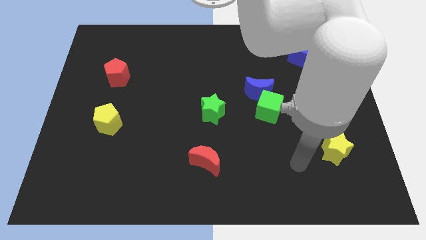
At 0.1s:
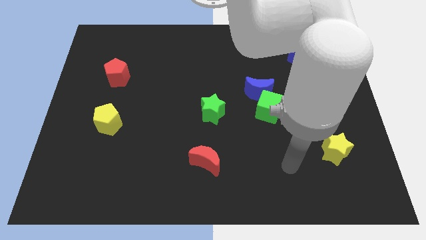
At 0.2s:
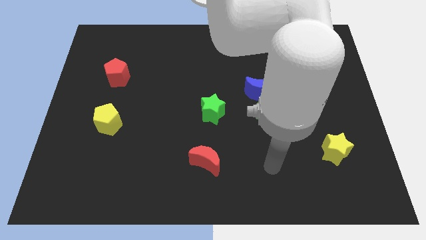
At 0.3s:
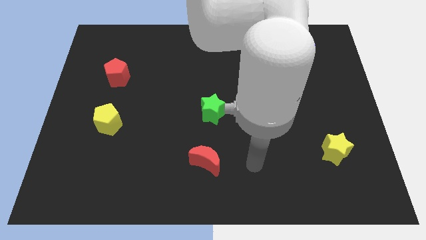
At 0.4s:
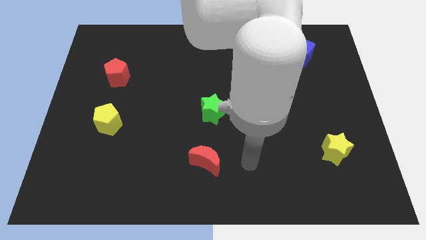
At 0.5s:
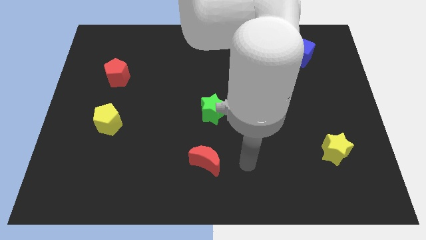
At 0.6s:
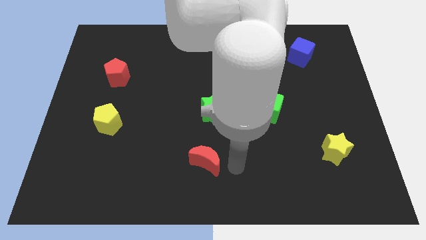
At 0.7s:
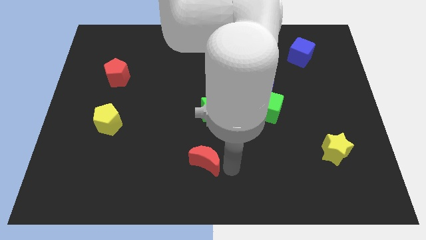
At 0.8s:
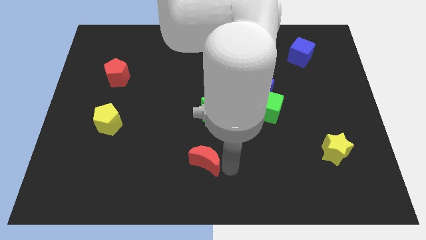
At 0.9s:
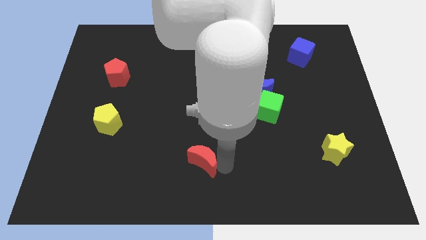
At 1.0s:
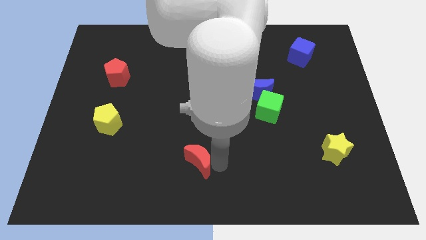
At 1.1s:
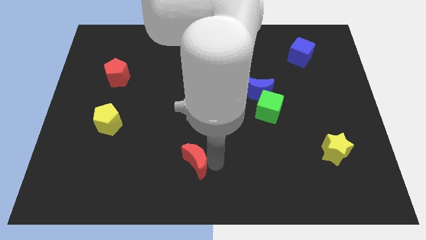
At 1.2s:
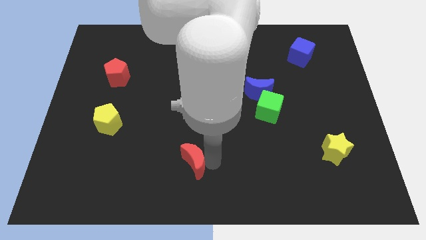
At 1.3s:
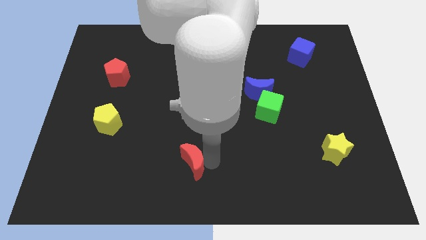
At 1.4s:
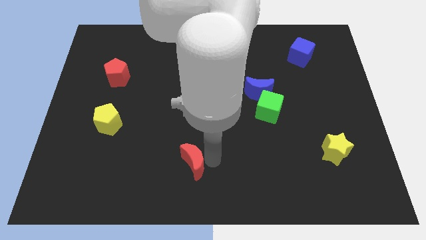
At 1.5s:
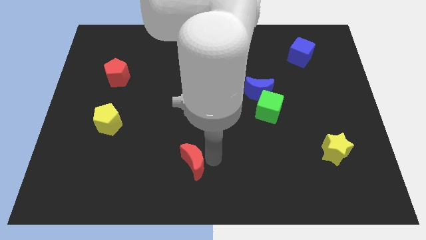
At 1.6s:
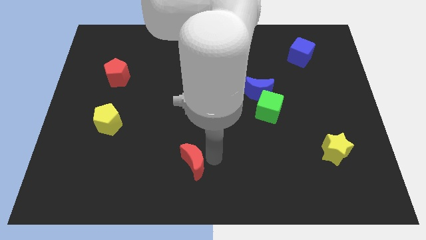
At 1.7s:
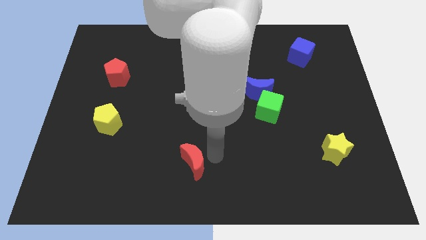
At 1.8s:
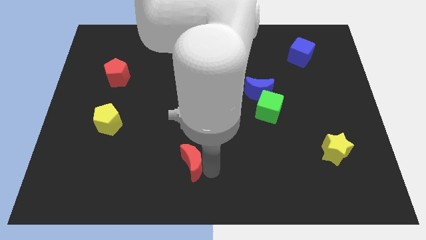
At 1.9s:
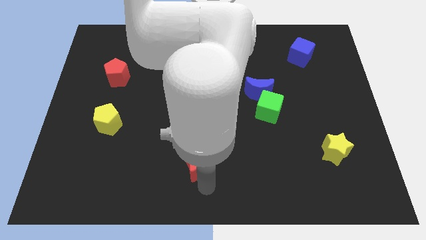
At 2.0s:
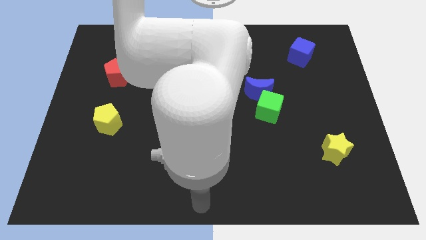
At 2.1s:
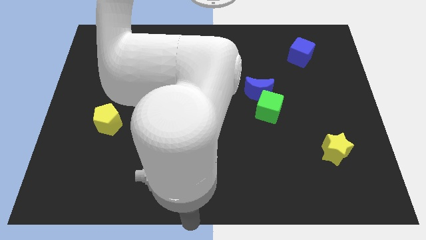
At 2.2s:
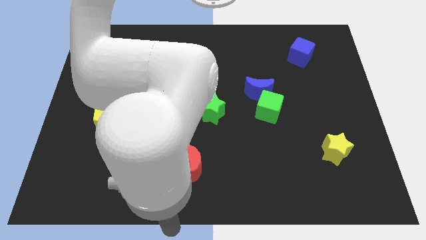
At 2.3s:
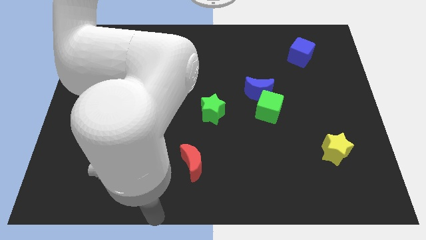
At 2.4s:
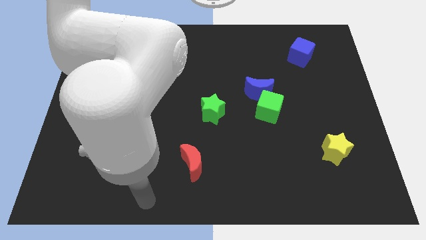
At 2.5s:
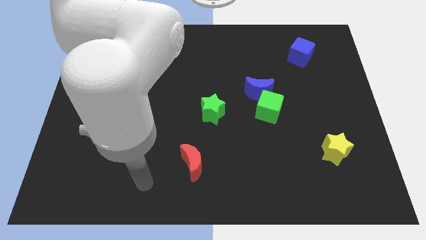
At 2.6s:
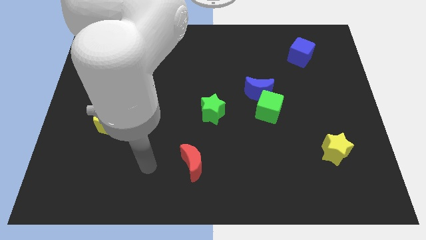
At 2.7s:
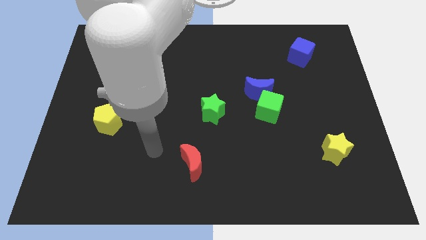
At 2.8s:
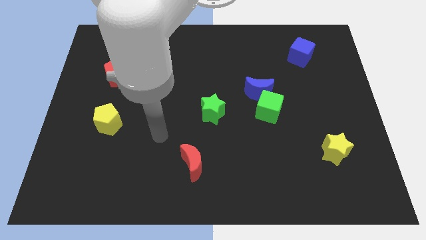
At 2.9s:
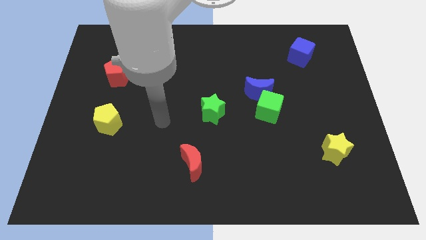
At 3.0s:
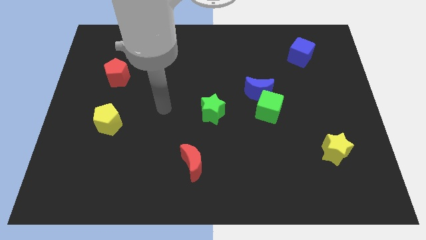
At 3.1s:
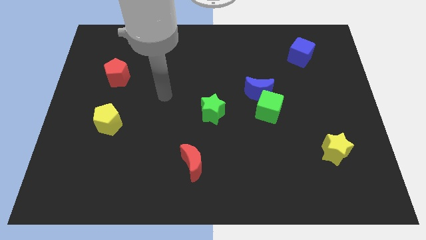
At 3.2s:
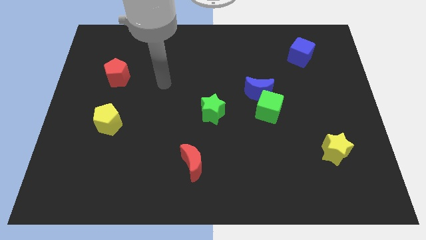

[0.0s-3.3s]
push the red crescent slightly to the left

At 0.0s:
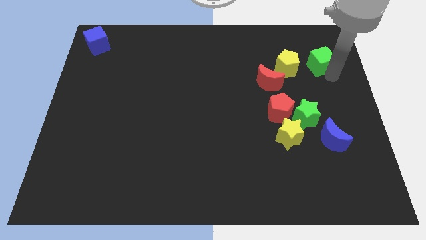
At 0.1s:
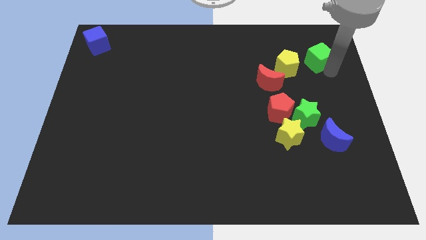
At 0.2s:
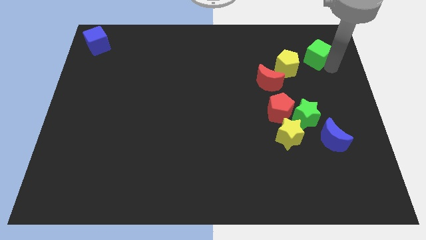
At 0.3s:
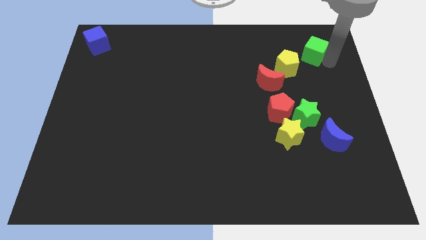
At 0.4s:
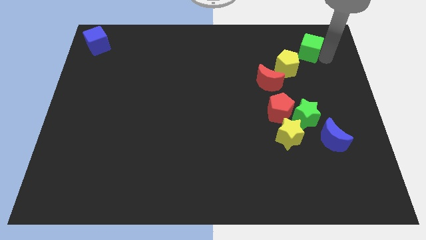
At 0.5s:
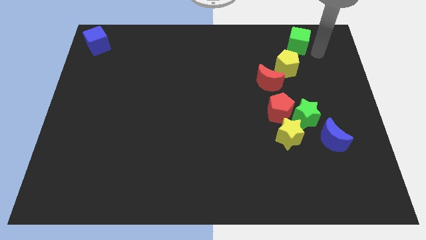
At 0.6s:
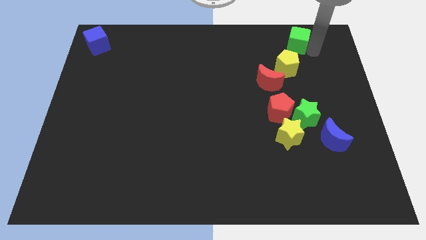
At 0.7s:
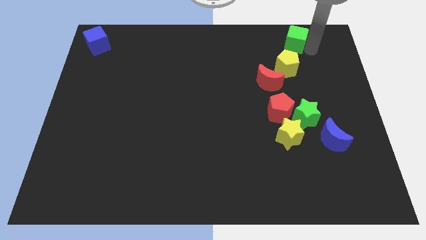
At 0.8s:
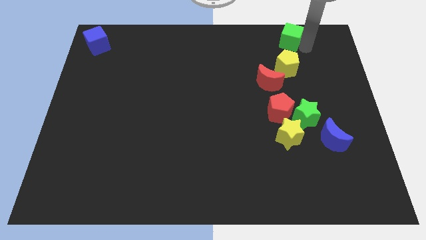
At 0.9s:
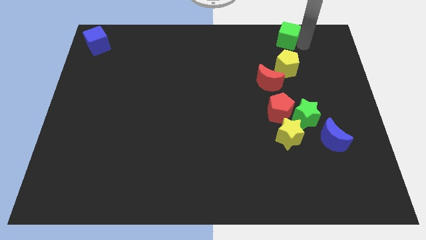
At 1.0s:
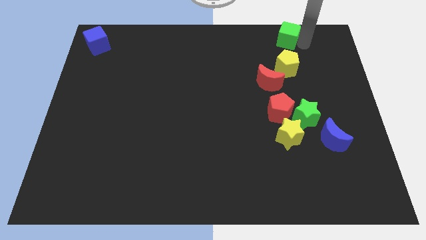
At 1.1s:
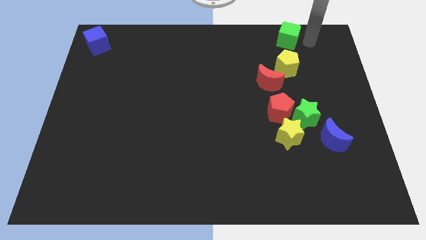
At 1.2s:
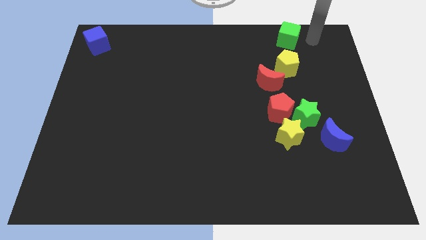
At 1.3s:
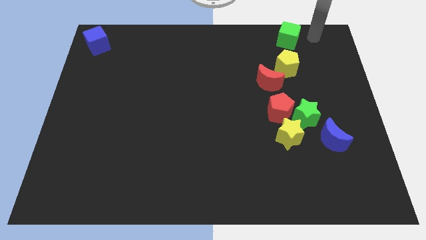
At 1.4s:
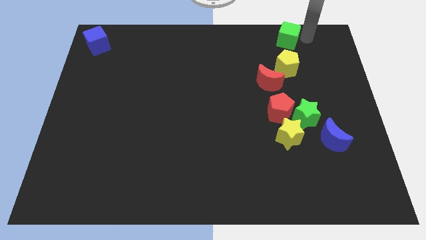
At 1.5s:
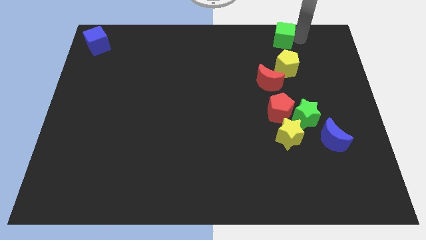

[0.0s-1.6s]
place the green cube above the yellow pentagon

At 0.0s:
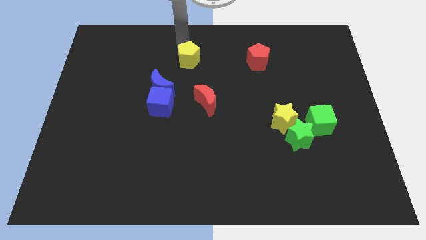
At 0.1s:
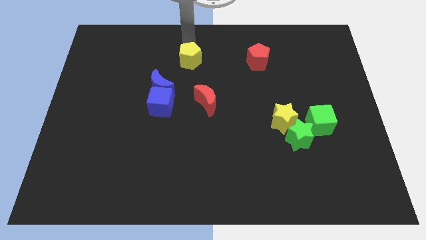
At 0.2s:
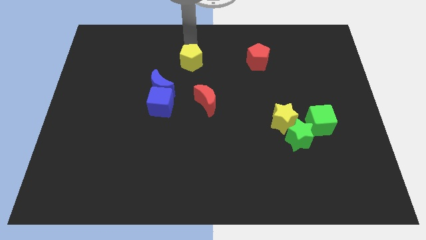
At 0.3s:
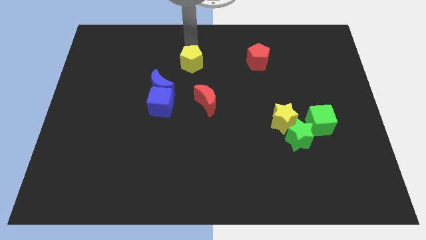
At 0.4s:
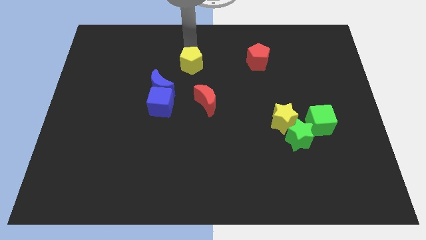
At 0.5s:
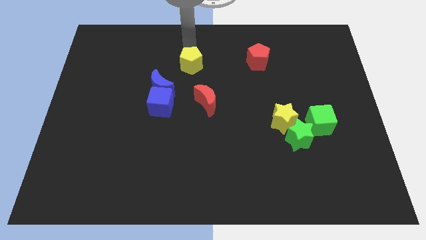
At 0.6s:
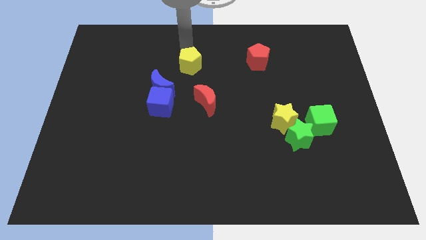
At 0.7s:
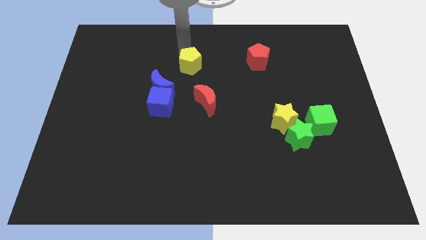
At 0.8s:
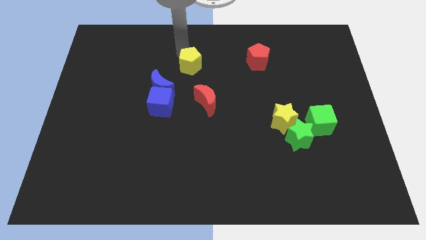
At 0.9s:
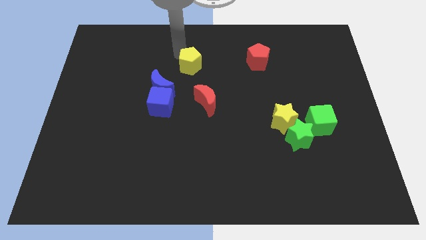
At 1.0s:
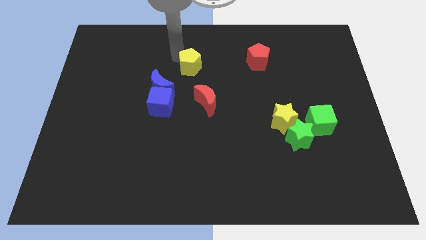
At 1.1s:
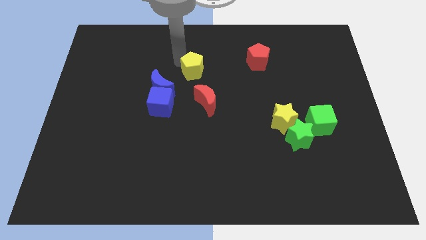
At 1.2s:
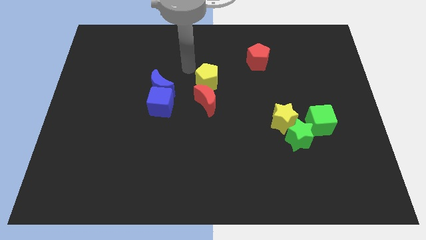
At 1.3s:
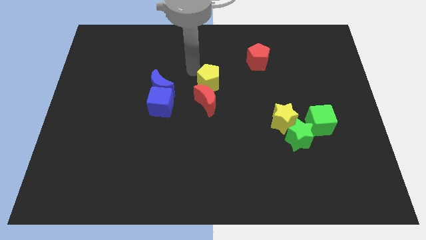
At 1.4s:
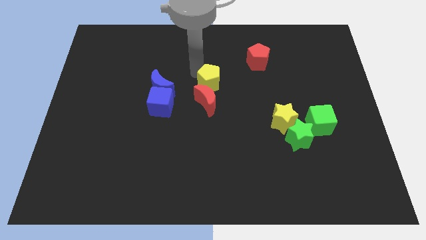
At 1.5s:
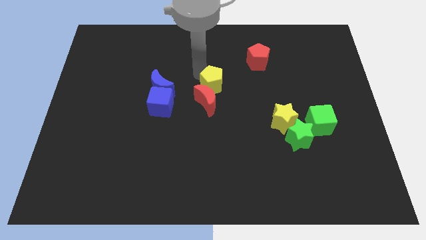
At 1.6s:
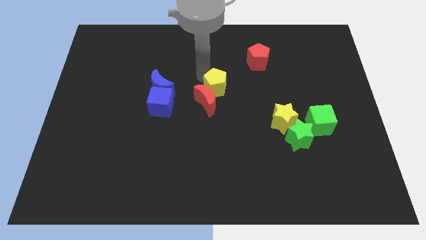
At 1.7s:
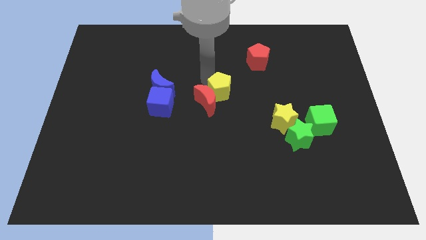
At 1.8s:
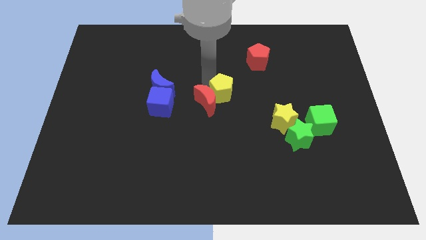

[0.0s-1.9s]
push the yellow pentagon to the right of the red crescent

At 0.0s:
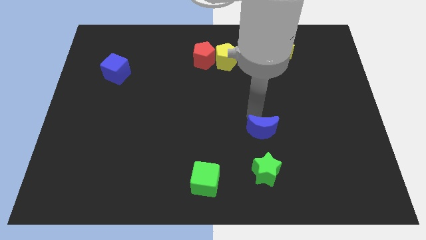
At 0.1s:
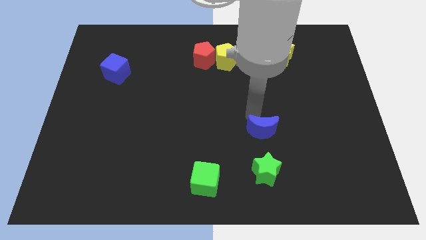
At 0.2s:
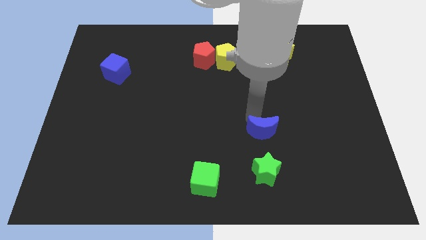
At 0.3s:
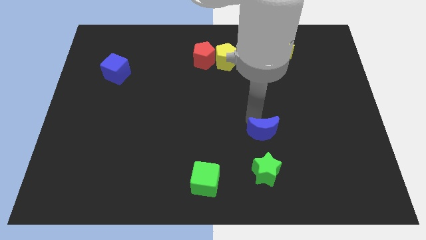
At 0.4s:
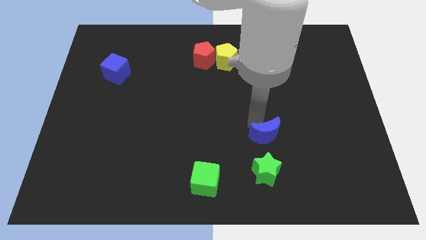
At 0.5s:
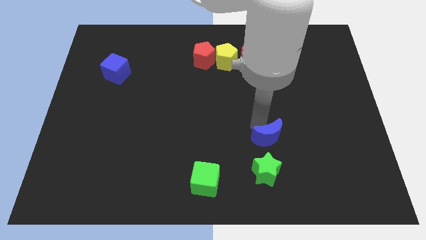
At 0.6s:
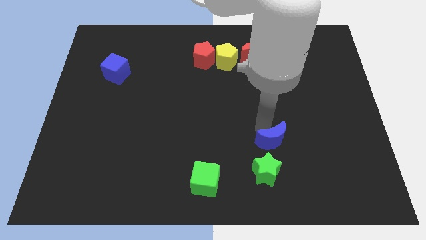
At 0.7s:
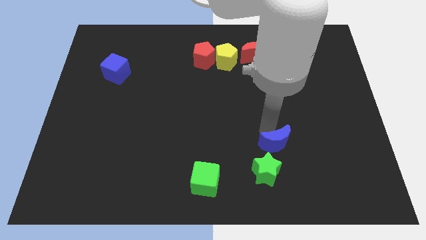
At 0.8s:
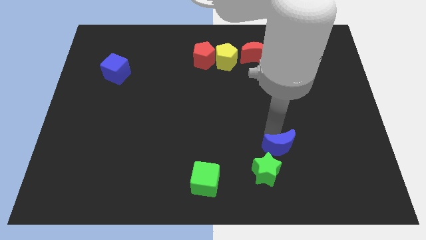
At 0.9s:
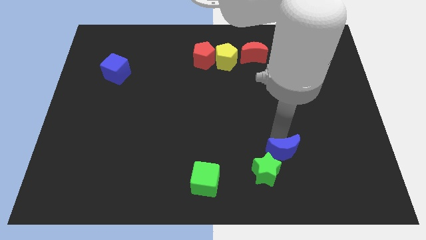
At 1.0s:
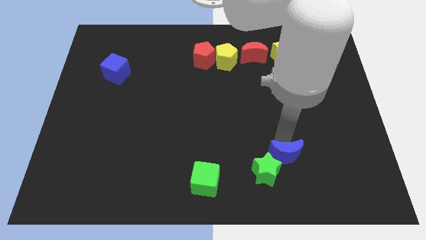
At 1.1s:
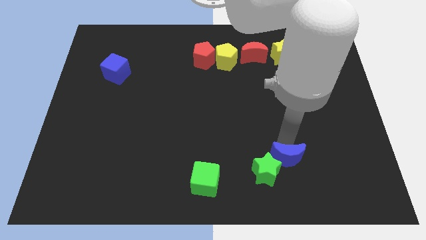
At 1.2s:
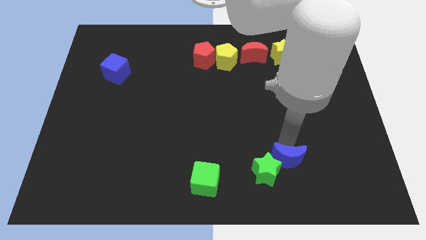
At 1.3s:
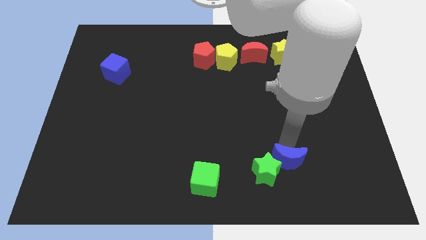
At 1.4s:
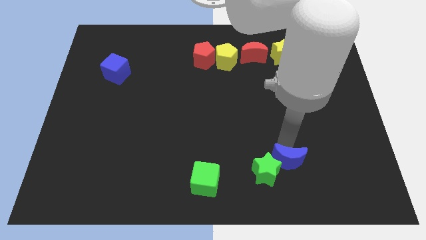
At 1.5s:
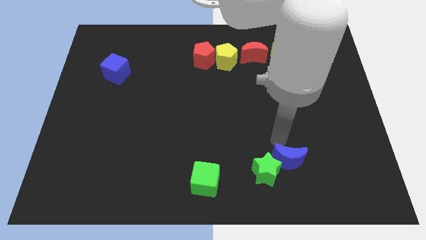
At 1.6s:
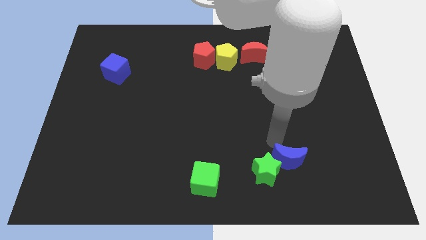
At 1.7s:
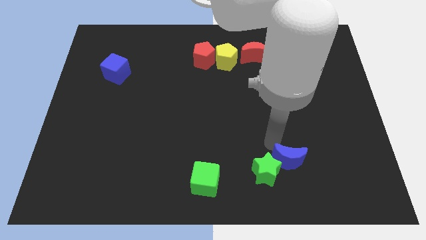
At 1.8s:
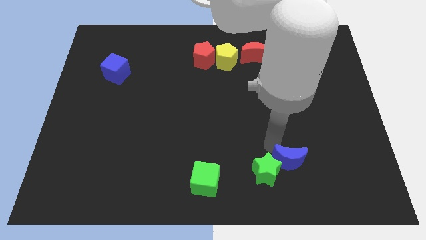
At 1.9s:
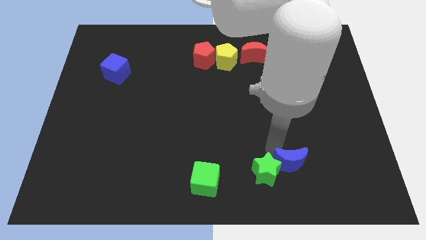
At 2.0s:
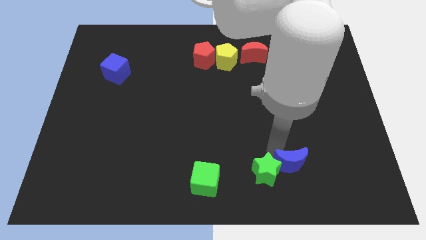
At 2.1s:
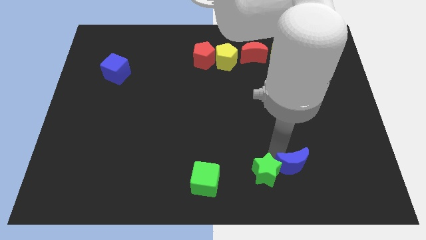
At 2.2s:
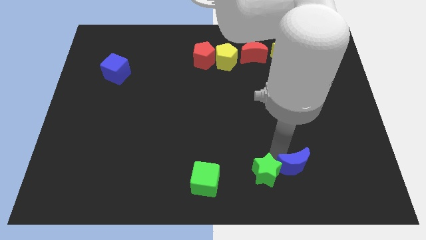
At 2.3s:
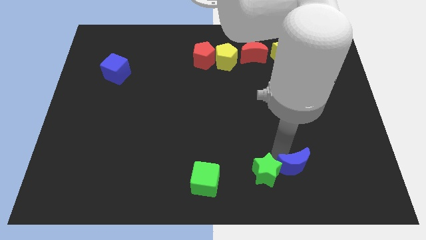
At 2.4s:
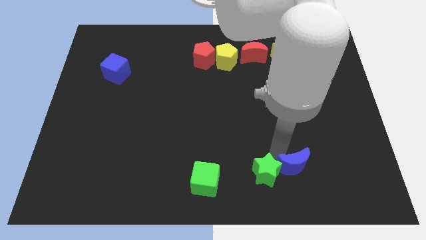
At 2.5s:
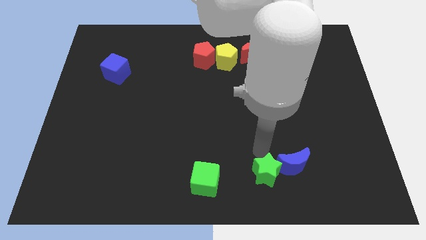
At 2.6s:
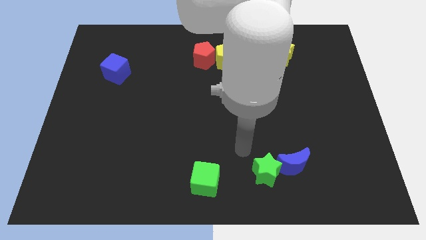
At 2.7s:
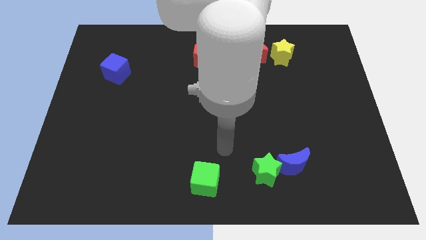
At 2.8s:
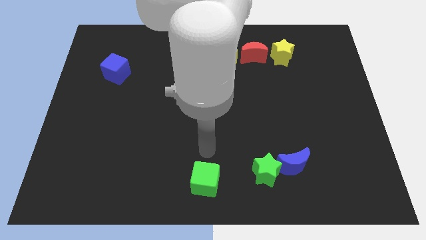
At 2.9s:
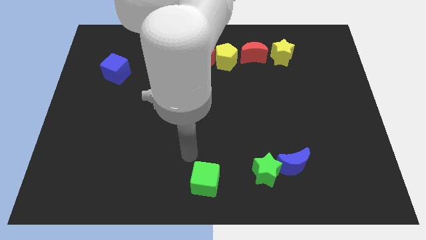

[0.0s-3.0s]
slide the blue moon top right to green star
